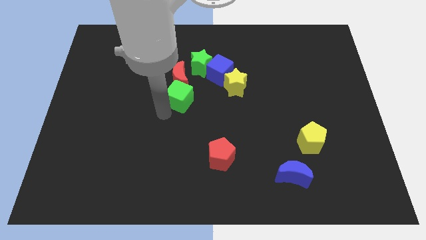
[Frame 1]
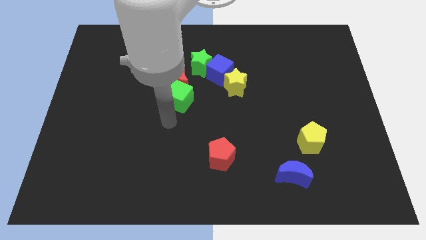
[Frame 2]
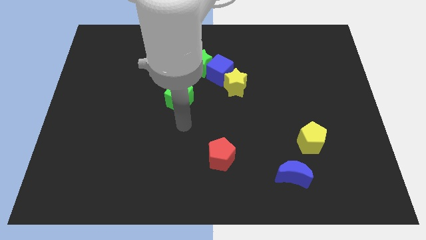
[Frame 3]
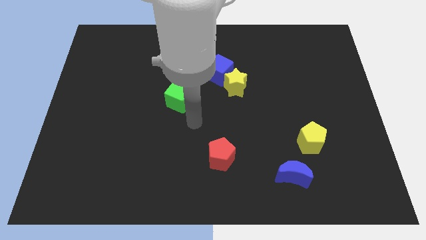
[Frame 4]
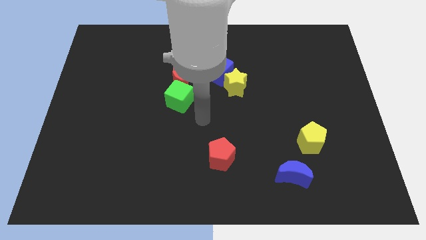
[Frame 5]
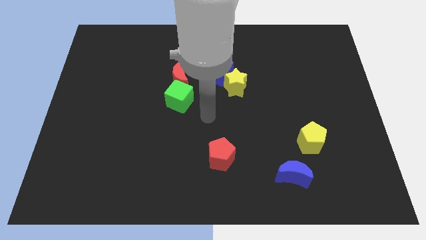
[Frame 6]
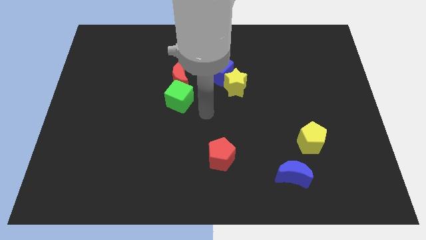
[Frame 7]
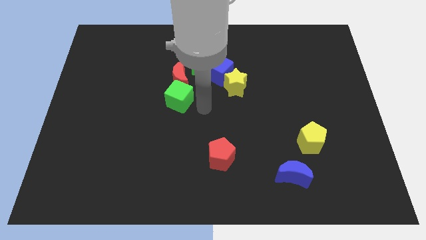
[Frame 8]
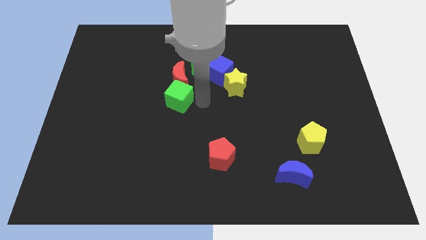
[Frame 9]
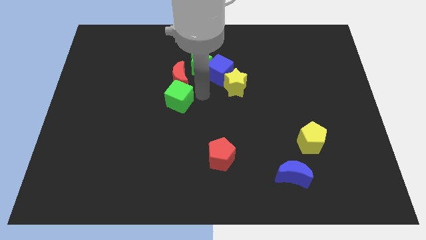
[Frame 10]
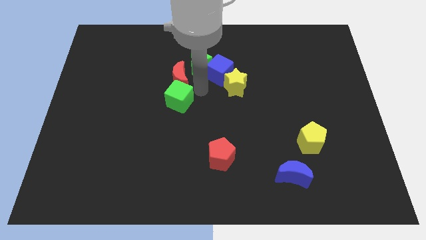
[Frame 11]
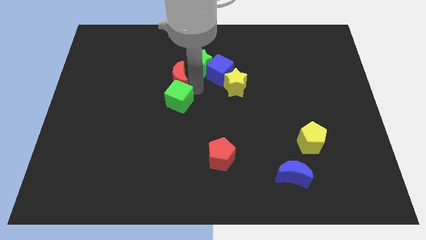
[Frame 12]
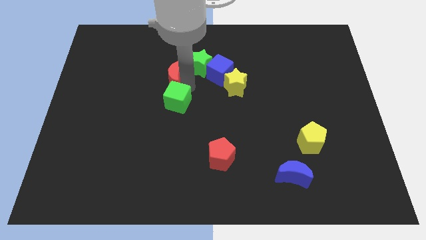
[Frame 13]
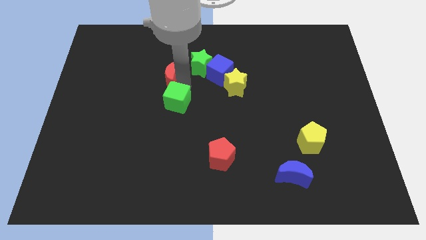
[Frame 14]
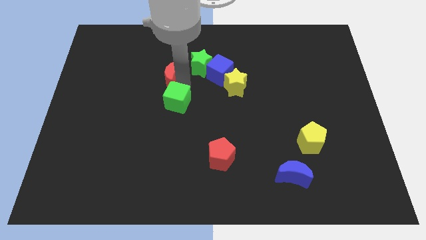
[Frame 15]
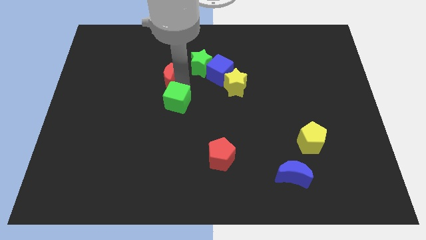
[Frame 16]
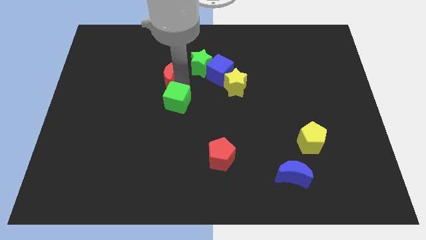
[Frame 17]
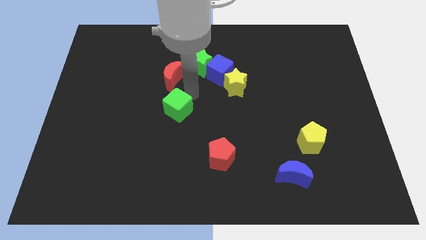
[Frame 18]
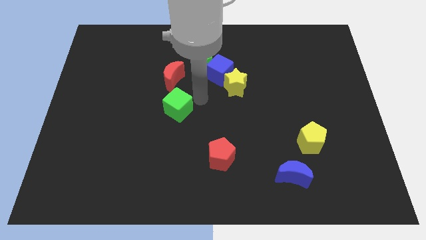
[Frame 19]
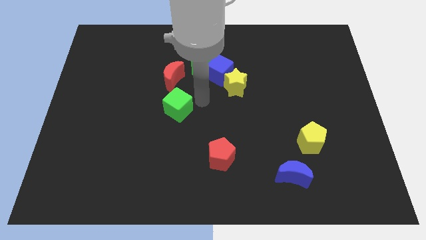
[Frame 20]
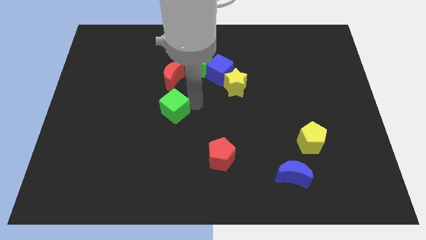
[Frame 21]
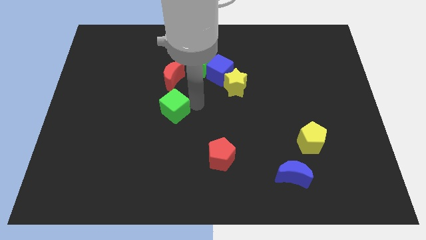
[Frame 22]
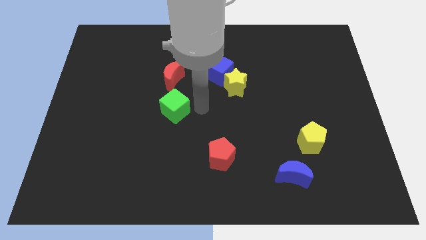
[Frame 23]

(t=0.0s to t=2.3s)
separate the green cube from the red moon

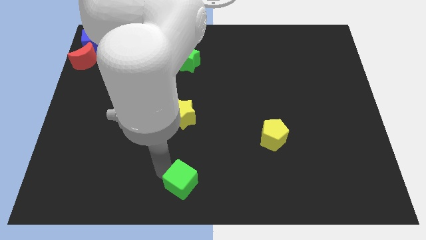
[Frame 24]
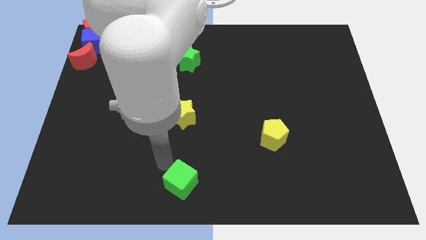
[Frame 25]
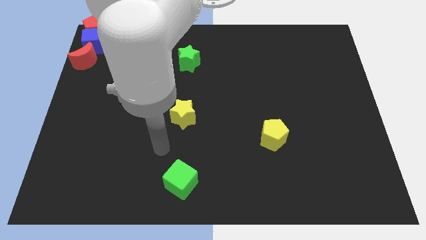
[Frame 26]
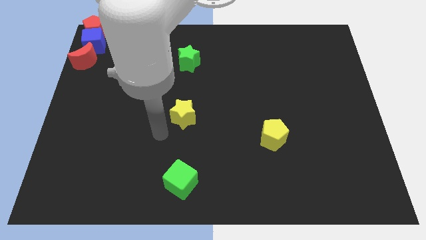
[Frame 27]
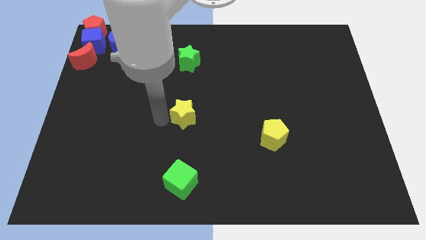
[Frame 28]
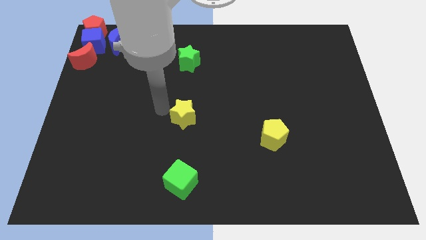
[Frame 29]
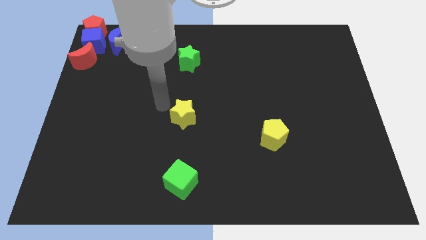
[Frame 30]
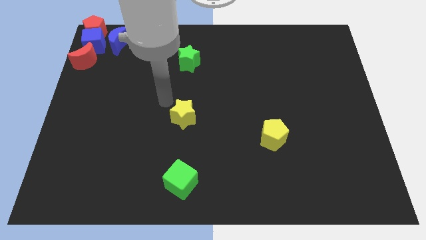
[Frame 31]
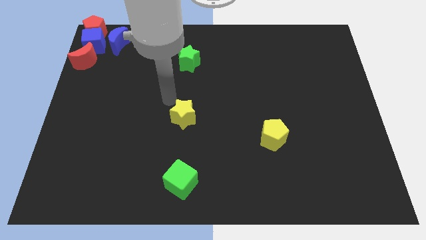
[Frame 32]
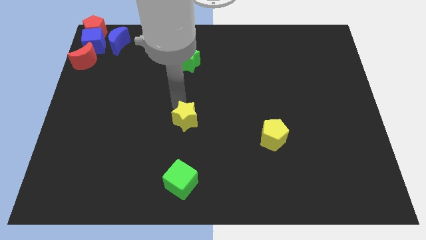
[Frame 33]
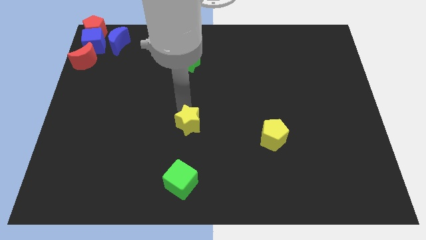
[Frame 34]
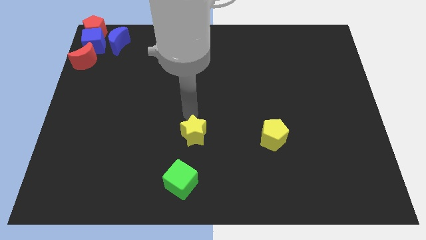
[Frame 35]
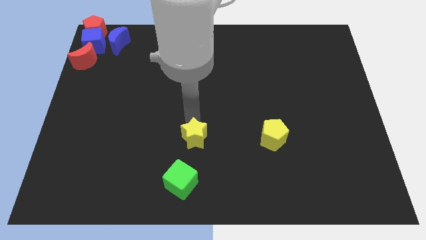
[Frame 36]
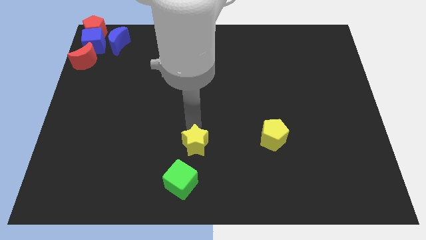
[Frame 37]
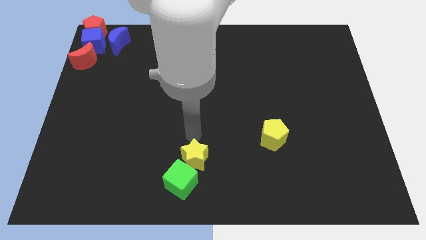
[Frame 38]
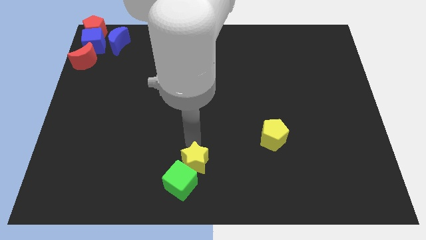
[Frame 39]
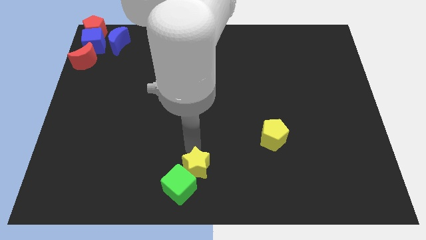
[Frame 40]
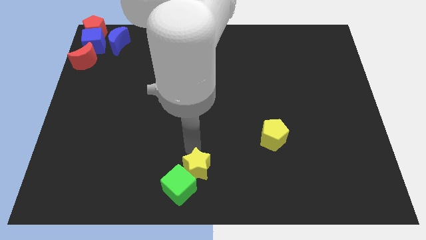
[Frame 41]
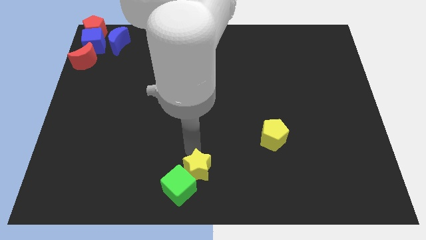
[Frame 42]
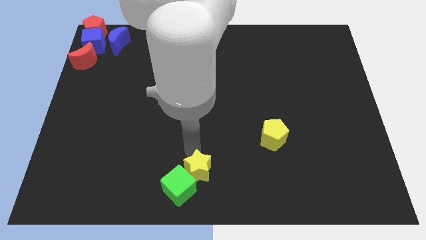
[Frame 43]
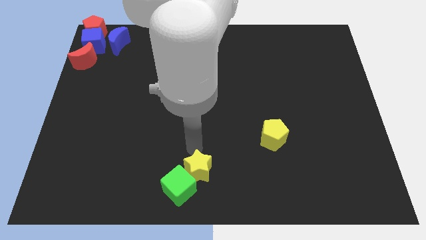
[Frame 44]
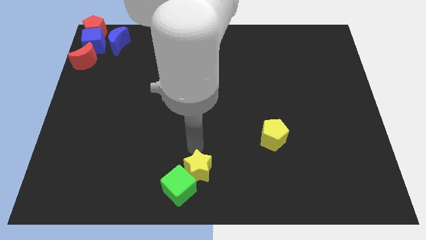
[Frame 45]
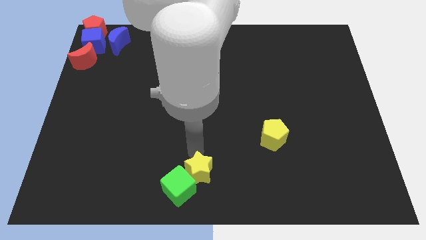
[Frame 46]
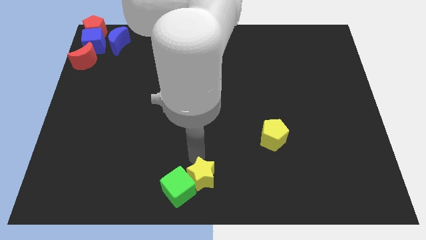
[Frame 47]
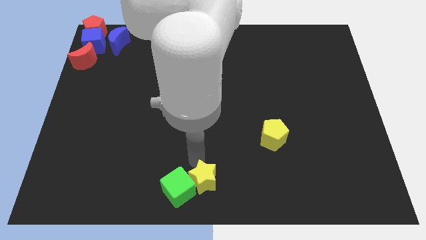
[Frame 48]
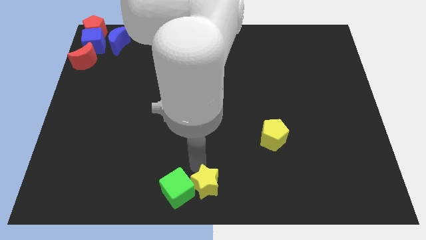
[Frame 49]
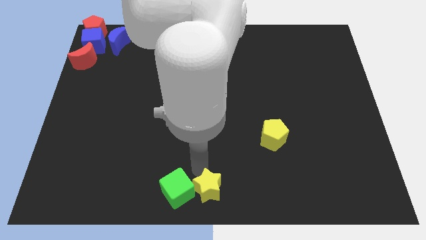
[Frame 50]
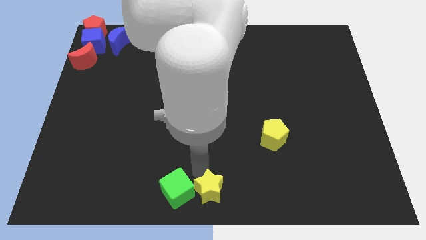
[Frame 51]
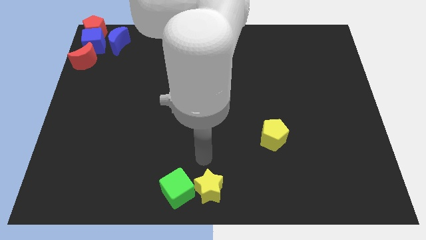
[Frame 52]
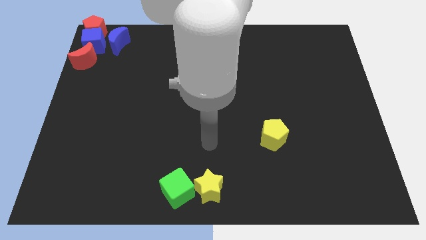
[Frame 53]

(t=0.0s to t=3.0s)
push the yellow star to the right of the green cube

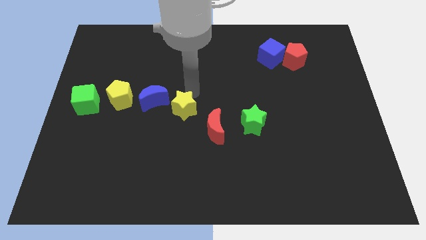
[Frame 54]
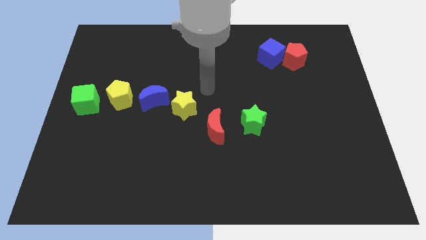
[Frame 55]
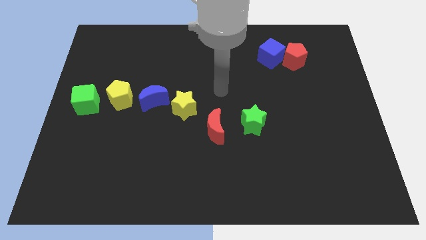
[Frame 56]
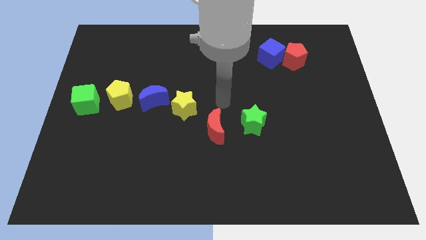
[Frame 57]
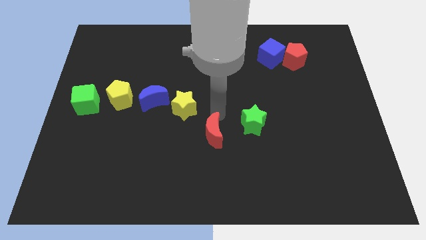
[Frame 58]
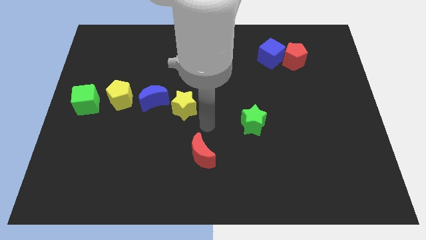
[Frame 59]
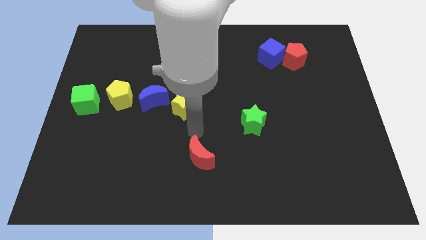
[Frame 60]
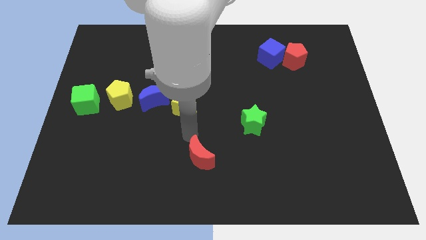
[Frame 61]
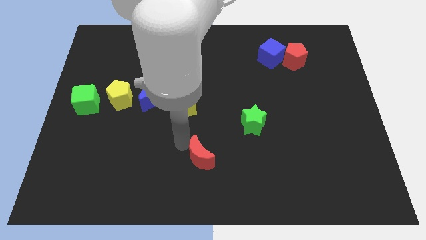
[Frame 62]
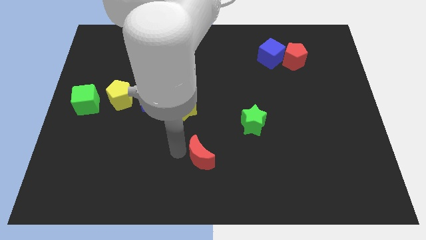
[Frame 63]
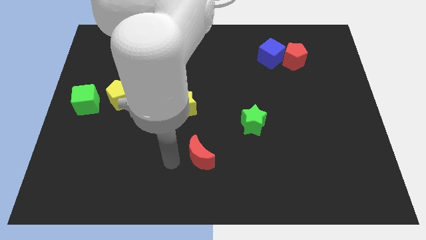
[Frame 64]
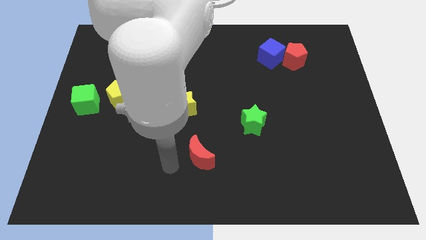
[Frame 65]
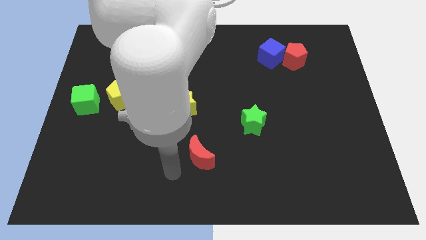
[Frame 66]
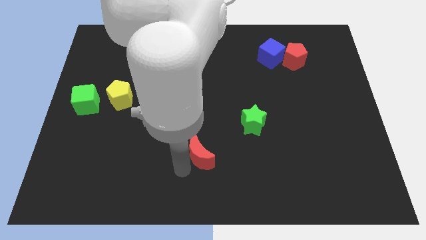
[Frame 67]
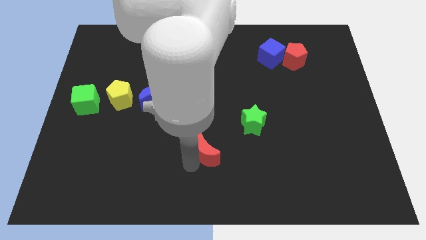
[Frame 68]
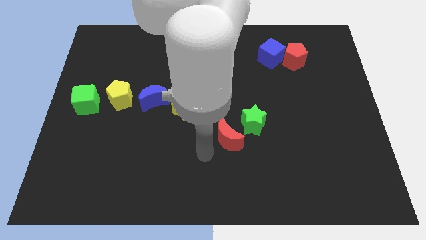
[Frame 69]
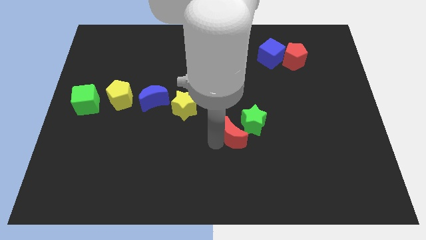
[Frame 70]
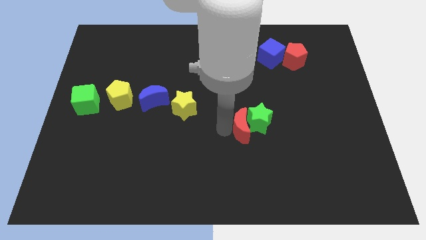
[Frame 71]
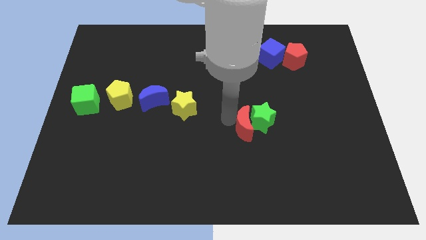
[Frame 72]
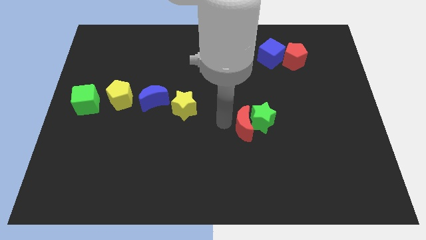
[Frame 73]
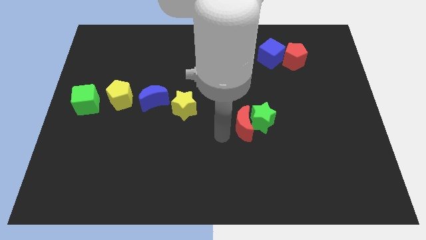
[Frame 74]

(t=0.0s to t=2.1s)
push the red moon into the green star

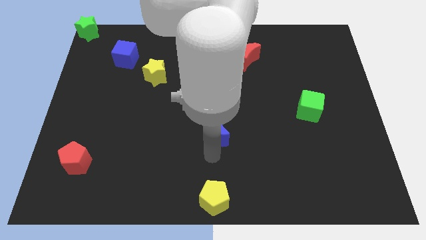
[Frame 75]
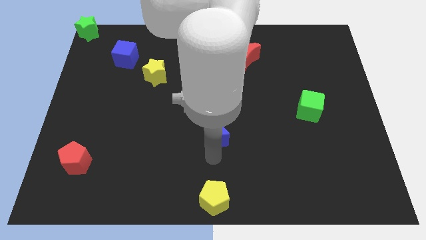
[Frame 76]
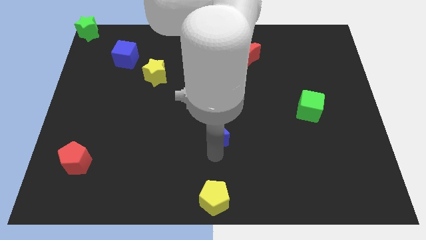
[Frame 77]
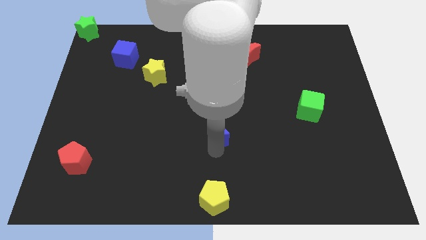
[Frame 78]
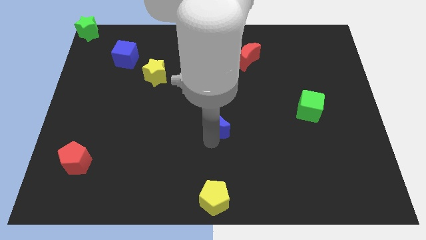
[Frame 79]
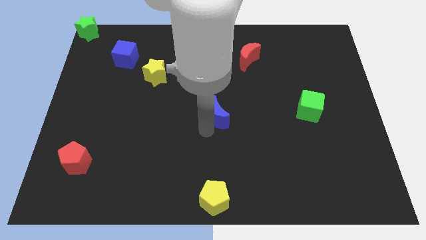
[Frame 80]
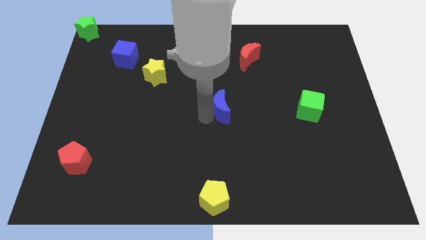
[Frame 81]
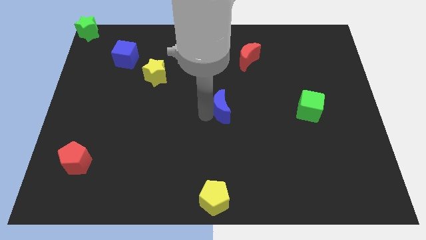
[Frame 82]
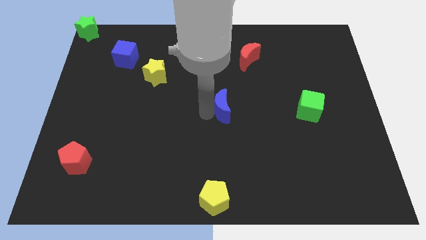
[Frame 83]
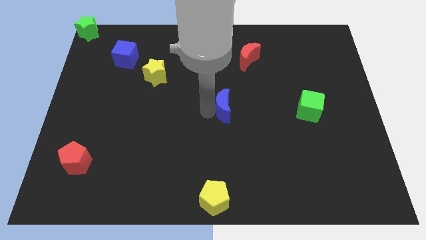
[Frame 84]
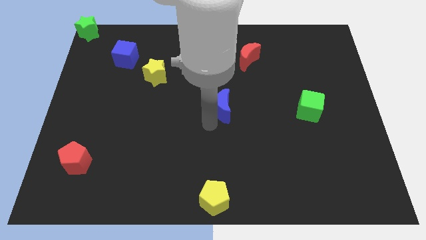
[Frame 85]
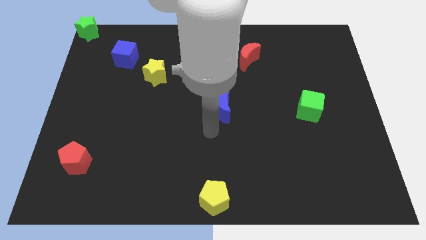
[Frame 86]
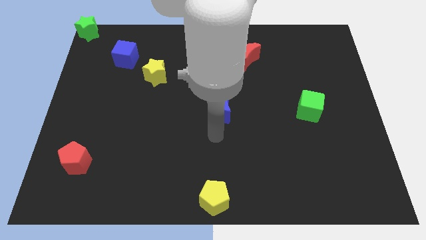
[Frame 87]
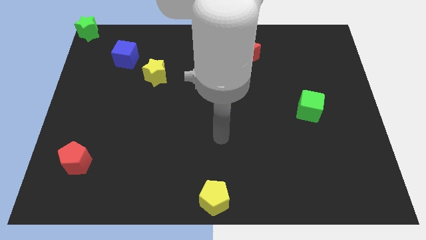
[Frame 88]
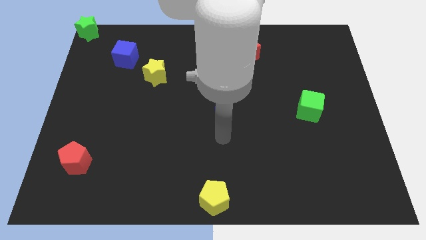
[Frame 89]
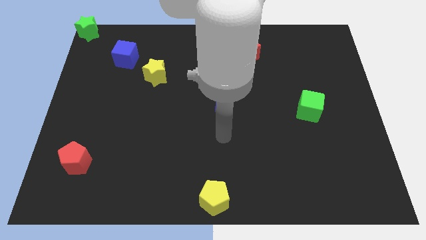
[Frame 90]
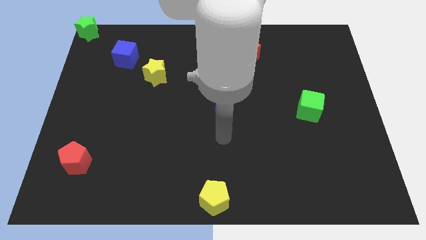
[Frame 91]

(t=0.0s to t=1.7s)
place the blue crescent to the center of the board
